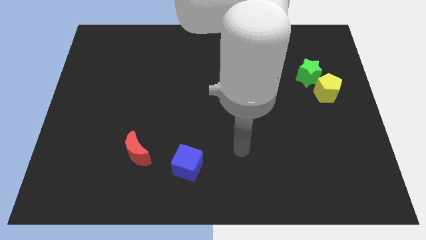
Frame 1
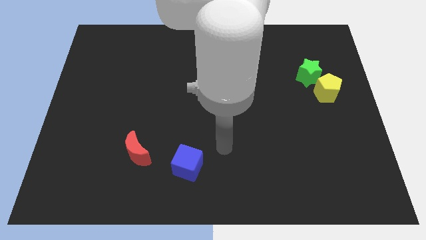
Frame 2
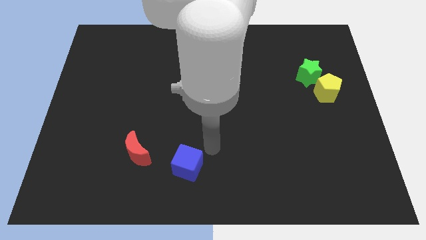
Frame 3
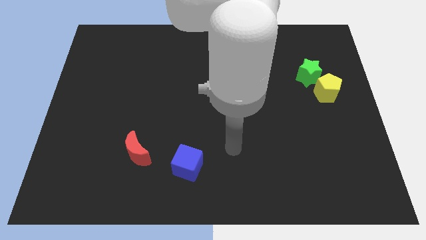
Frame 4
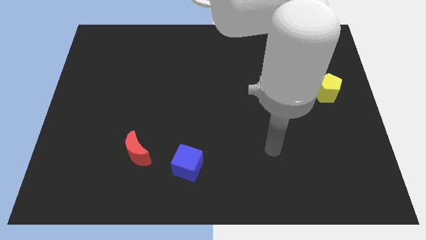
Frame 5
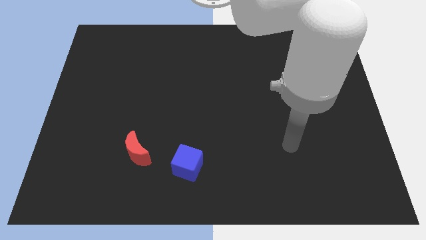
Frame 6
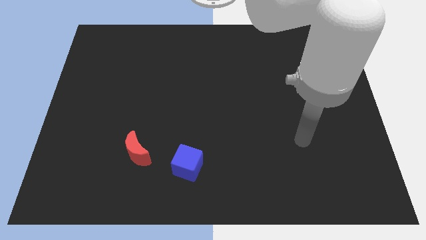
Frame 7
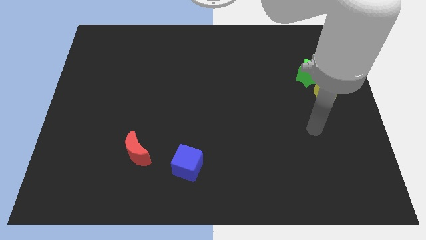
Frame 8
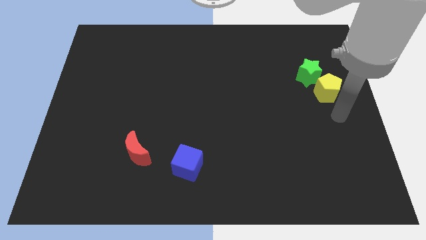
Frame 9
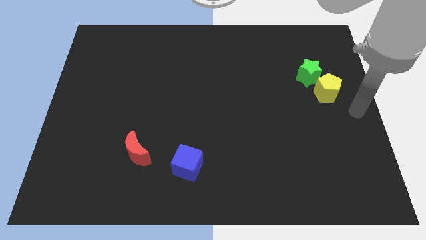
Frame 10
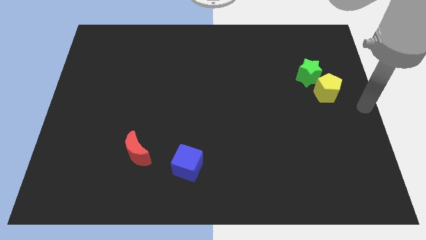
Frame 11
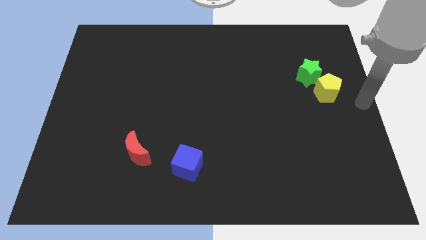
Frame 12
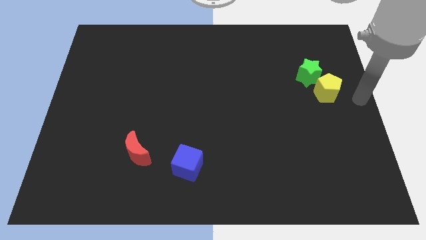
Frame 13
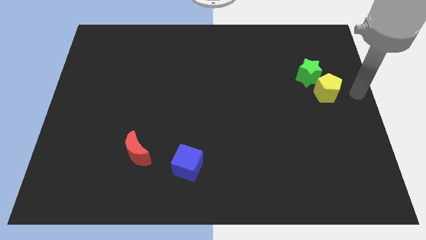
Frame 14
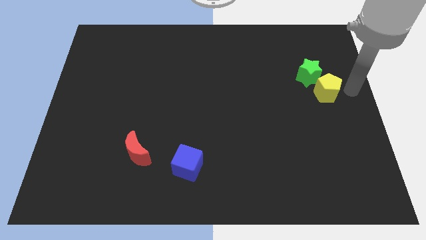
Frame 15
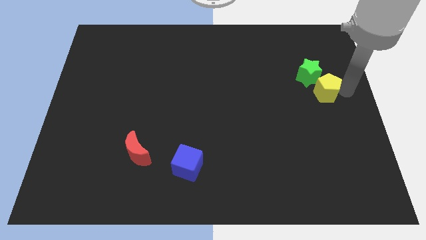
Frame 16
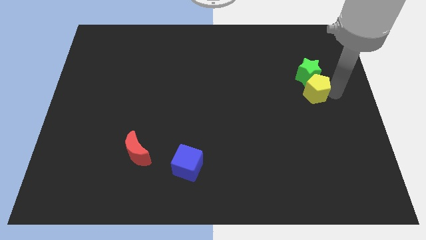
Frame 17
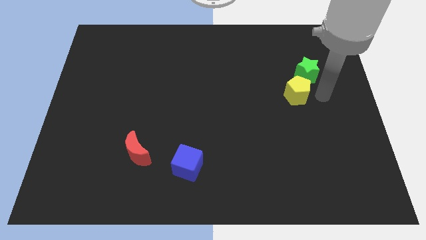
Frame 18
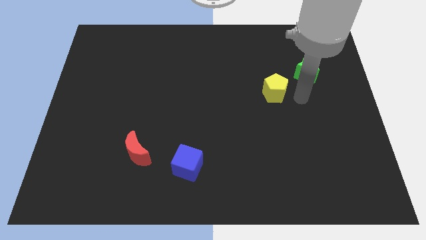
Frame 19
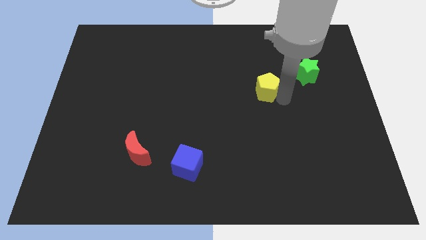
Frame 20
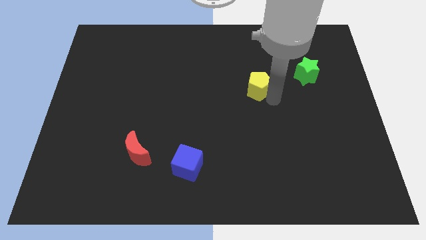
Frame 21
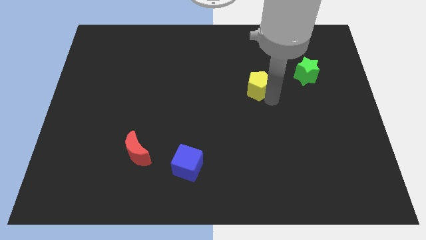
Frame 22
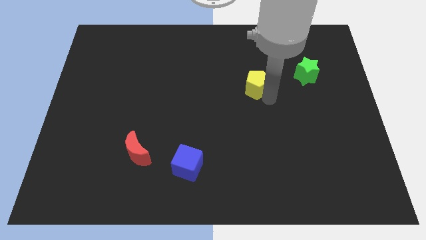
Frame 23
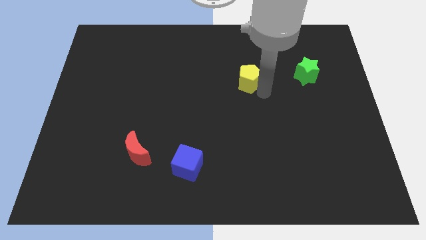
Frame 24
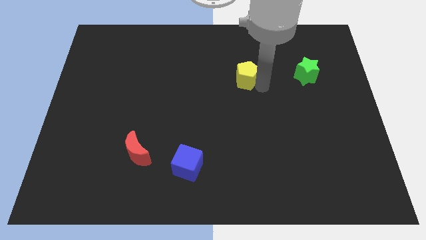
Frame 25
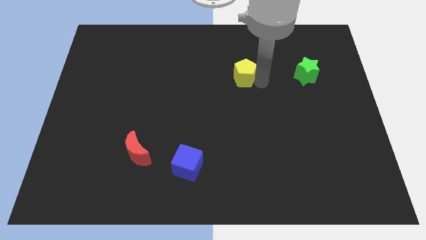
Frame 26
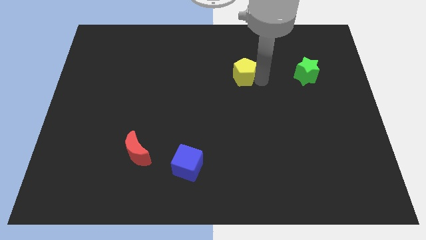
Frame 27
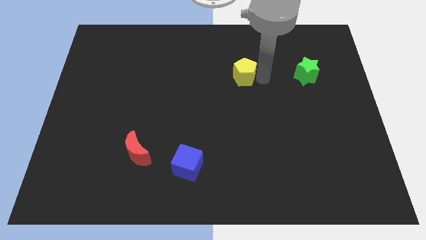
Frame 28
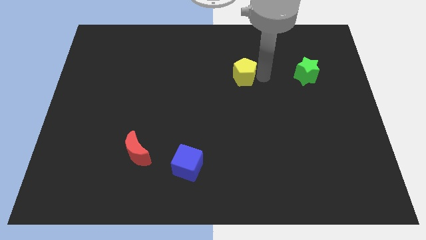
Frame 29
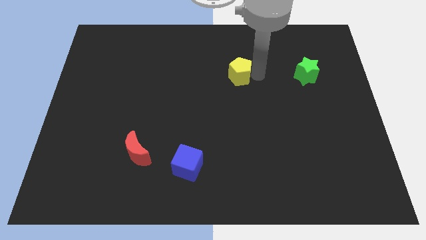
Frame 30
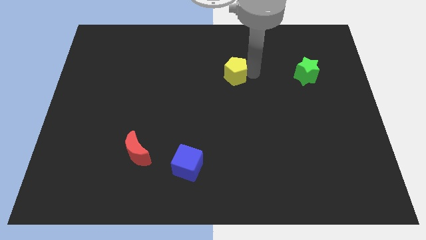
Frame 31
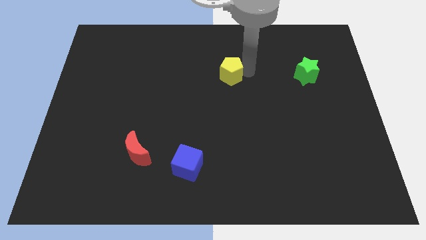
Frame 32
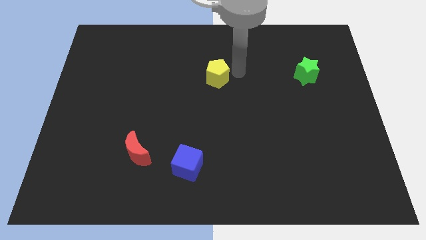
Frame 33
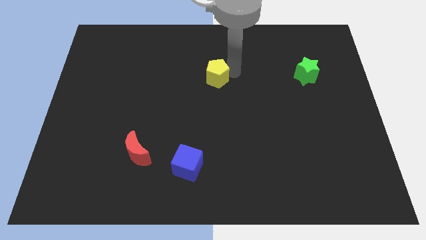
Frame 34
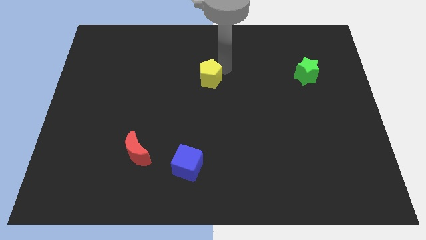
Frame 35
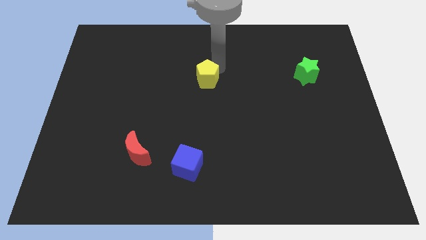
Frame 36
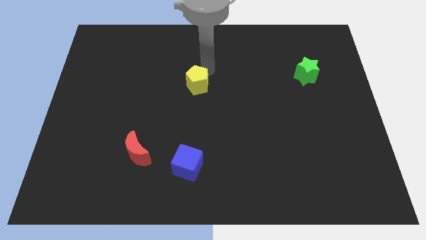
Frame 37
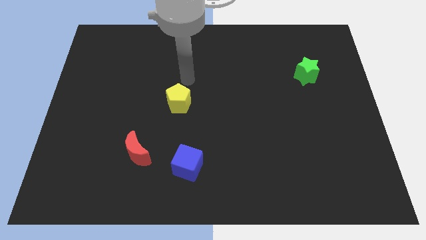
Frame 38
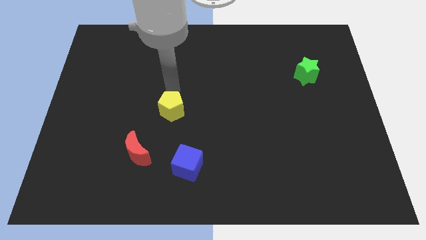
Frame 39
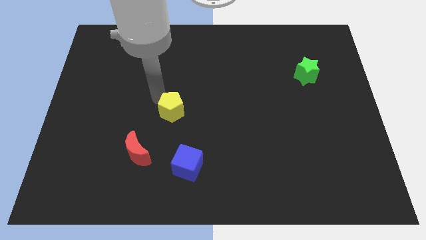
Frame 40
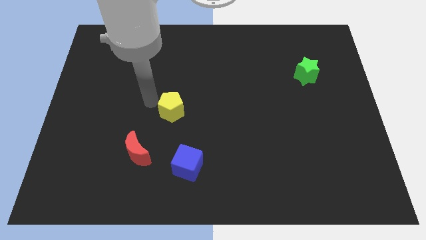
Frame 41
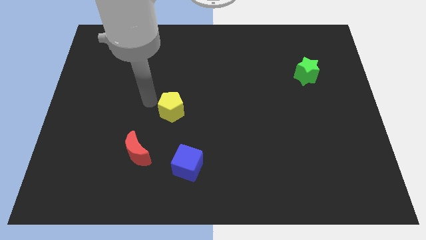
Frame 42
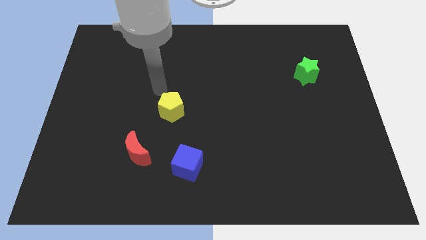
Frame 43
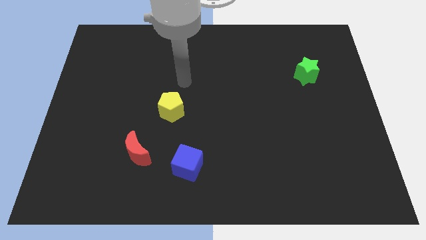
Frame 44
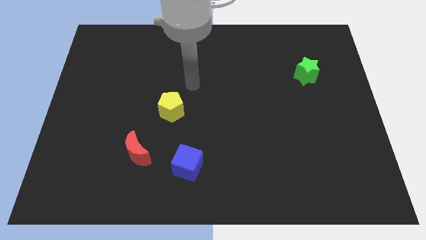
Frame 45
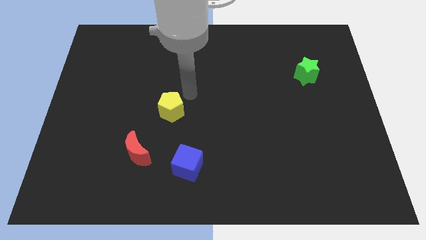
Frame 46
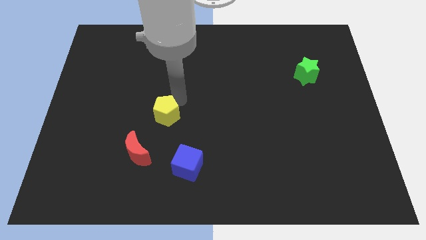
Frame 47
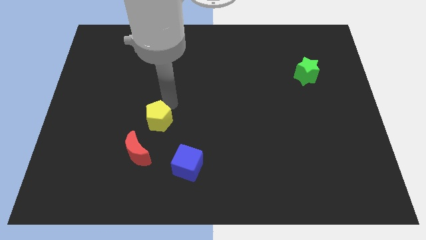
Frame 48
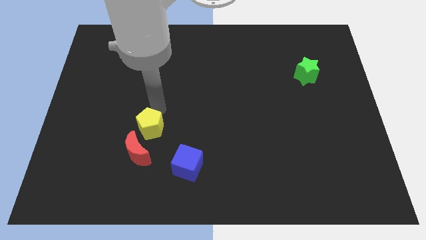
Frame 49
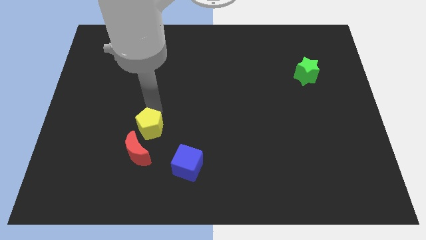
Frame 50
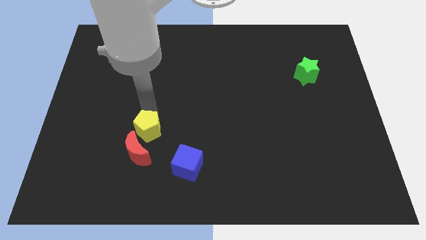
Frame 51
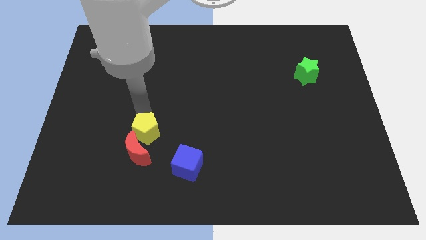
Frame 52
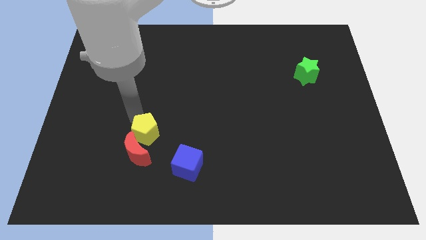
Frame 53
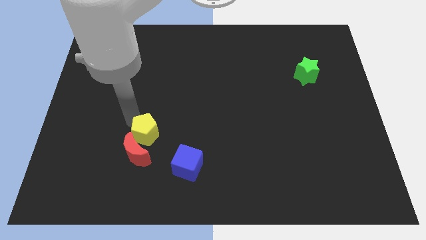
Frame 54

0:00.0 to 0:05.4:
put the yellow pentagon towards the moon

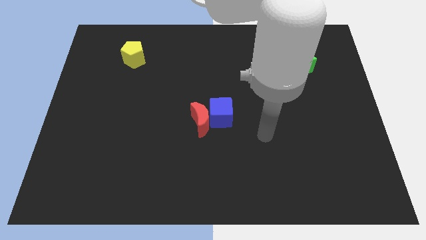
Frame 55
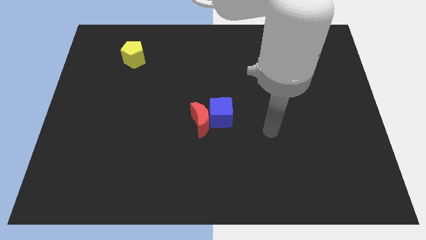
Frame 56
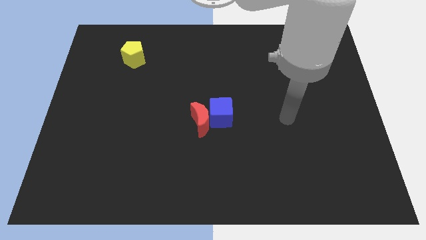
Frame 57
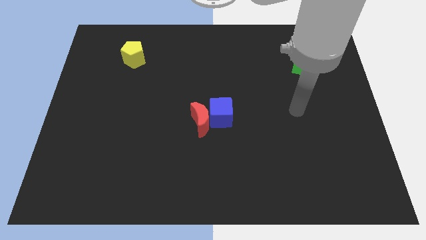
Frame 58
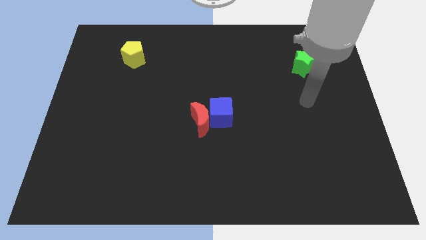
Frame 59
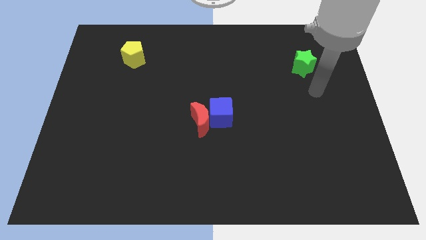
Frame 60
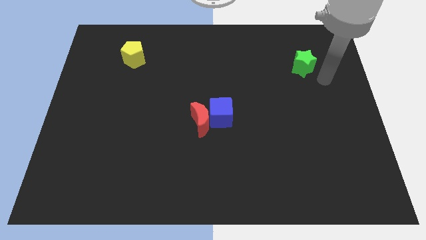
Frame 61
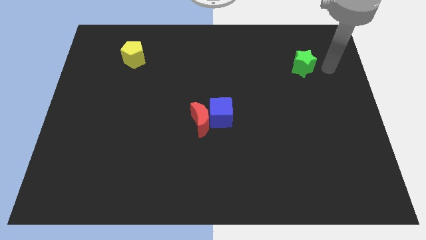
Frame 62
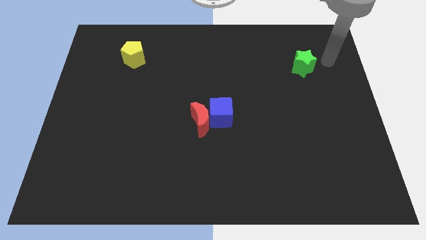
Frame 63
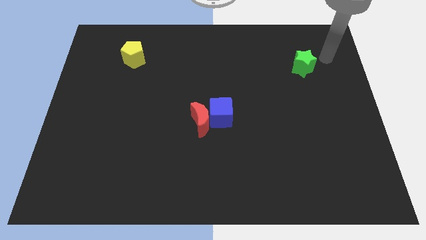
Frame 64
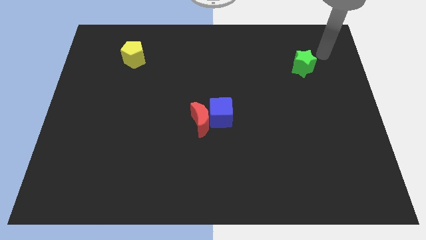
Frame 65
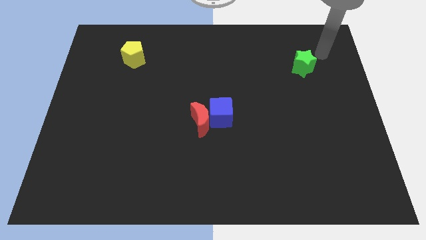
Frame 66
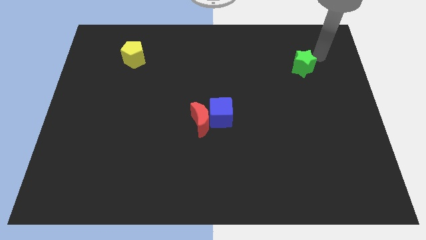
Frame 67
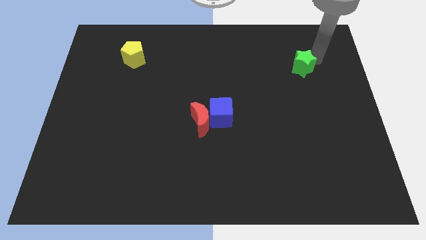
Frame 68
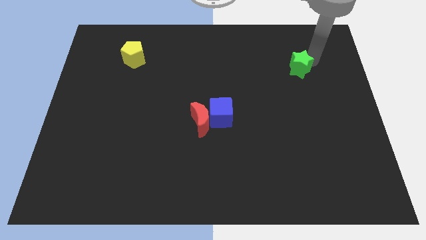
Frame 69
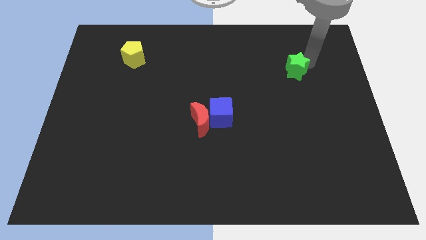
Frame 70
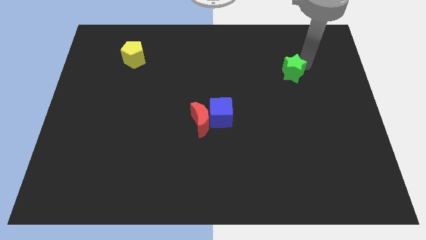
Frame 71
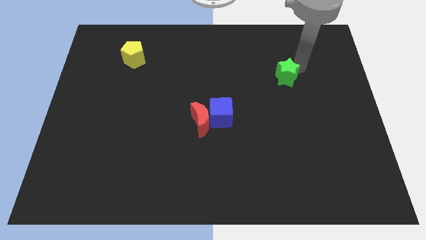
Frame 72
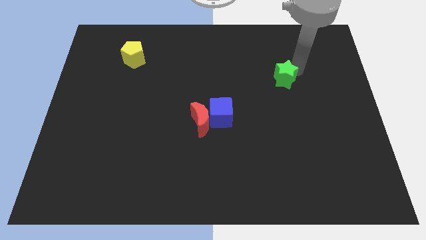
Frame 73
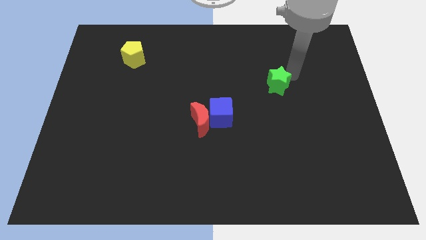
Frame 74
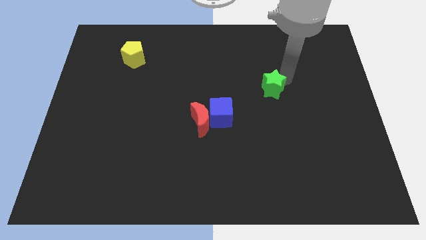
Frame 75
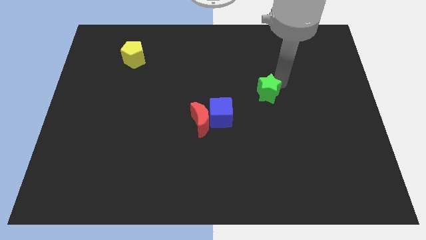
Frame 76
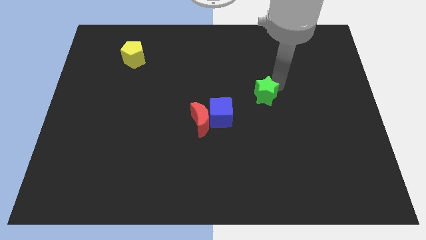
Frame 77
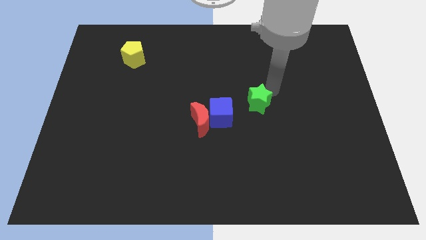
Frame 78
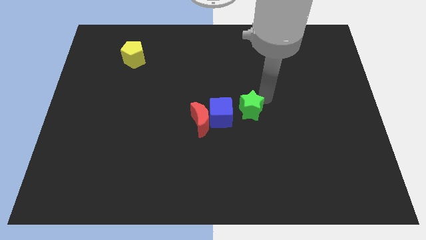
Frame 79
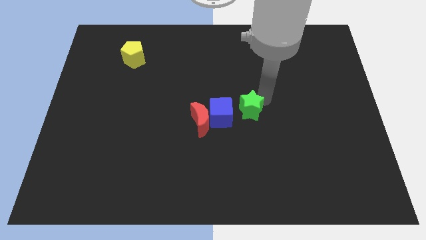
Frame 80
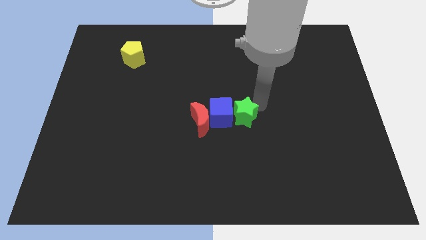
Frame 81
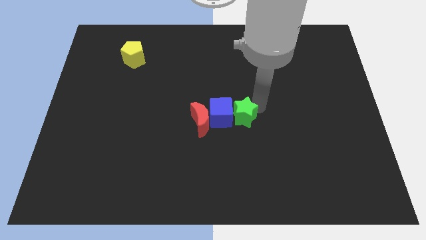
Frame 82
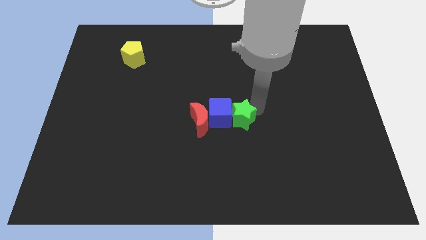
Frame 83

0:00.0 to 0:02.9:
slide the star towards the cube
